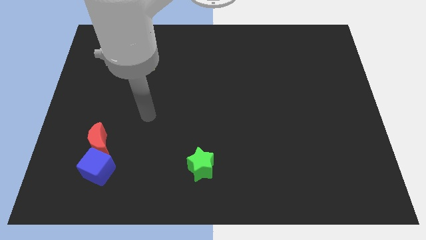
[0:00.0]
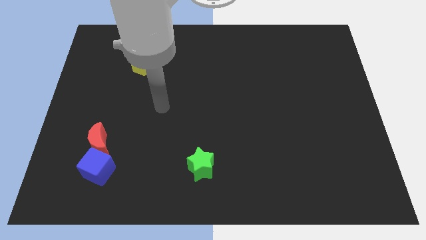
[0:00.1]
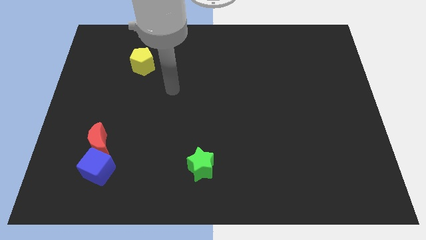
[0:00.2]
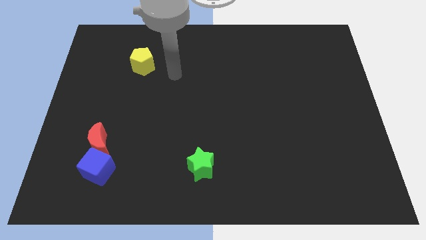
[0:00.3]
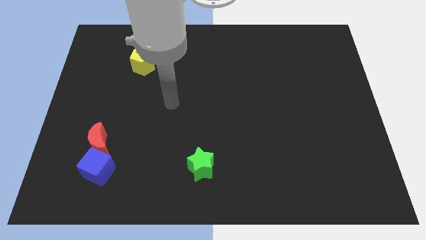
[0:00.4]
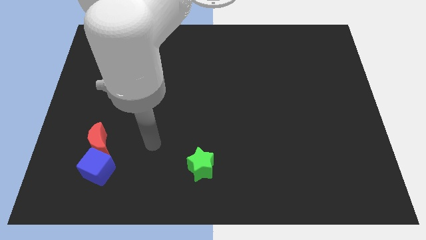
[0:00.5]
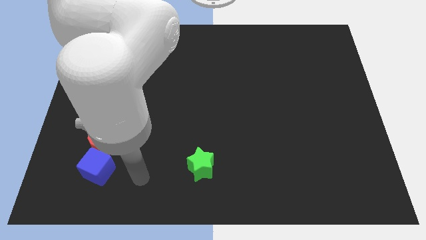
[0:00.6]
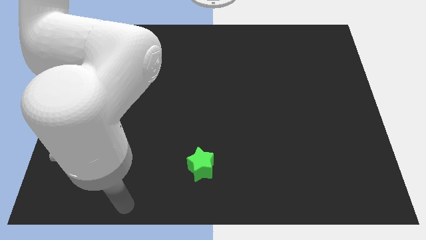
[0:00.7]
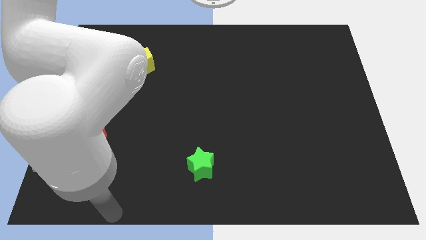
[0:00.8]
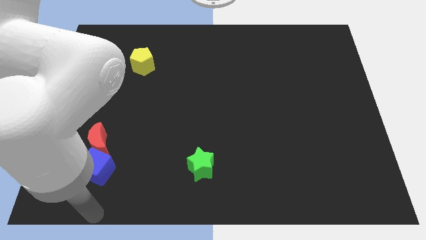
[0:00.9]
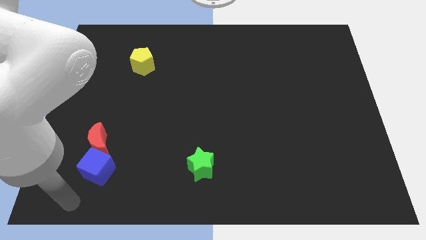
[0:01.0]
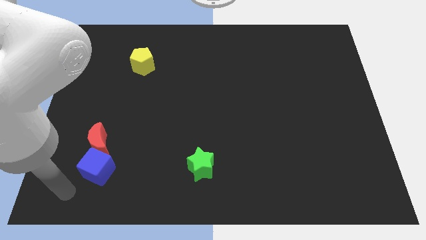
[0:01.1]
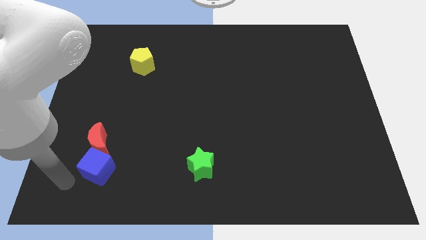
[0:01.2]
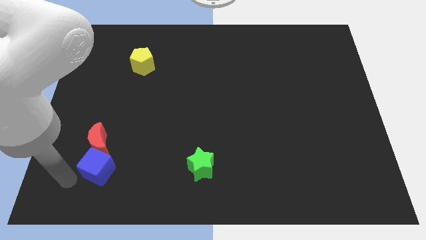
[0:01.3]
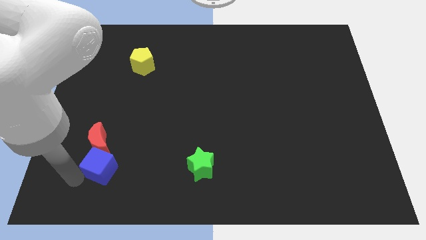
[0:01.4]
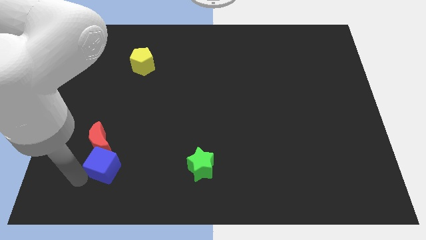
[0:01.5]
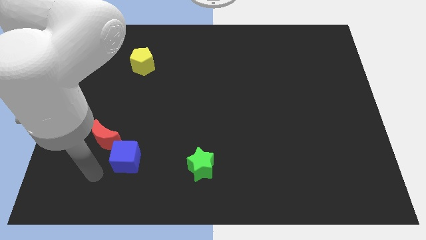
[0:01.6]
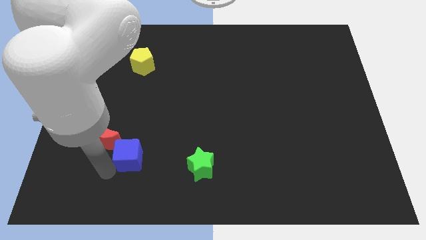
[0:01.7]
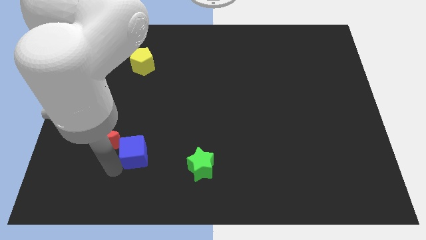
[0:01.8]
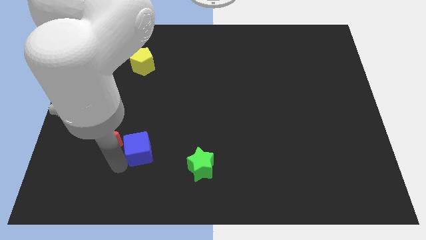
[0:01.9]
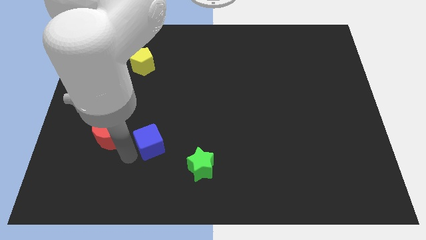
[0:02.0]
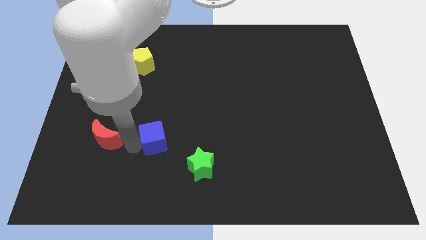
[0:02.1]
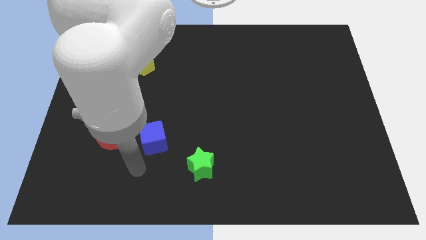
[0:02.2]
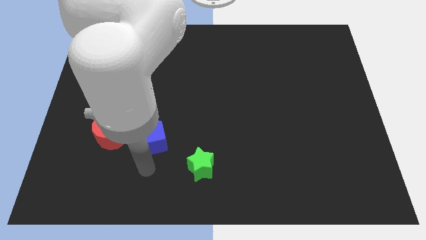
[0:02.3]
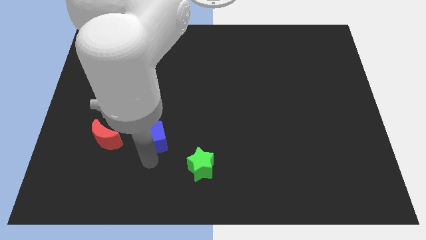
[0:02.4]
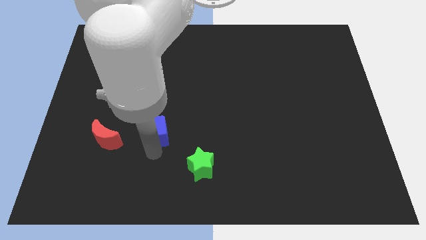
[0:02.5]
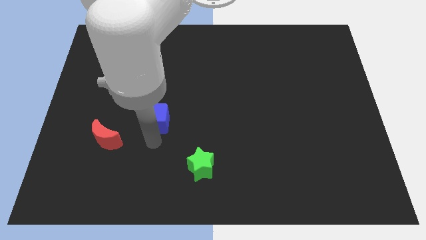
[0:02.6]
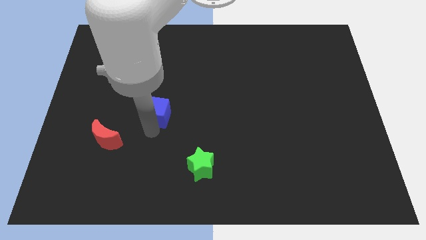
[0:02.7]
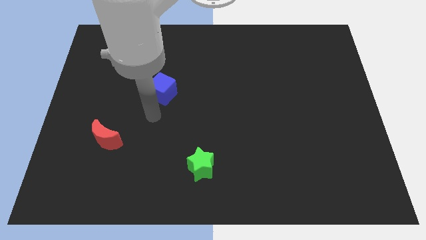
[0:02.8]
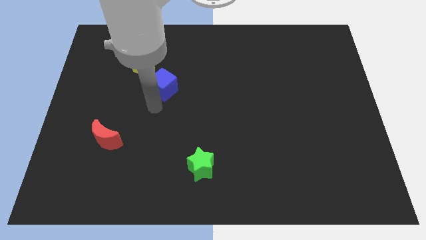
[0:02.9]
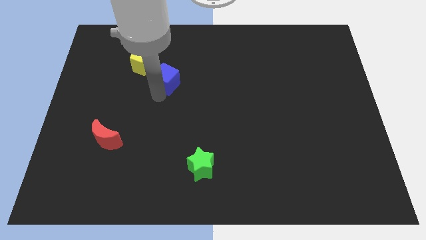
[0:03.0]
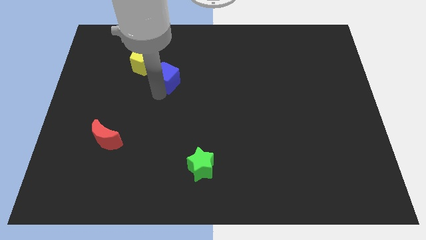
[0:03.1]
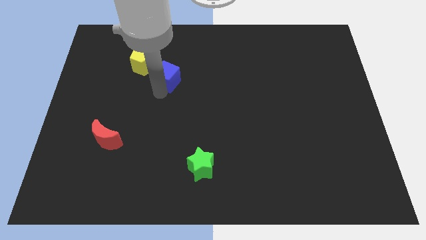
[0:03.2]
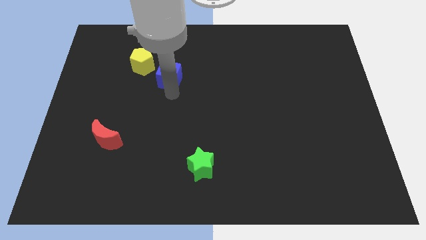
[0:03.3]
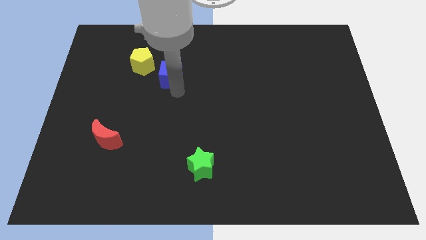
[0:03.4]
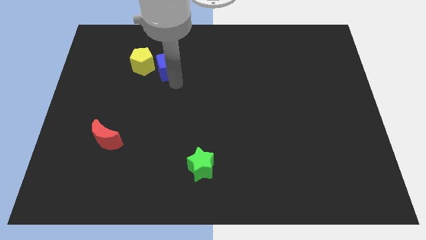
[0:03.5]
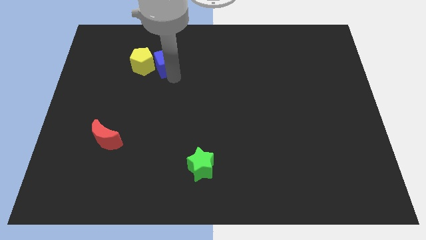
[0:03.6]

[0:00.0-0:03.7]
put the cube close to the yellow block
